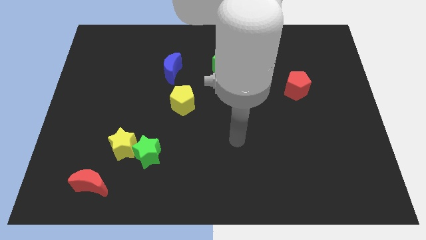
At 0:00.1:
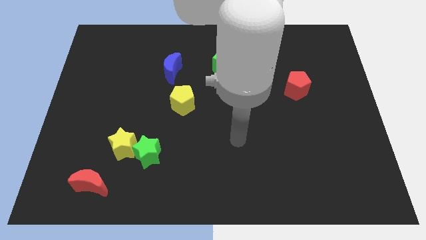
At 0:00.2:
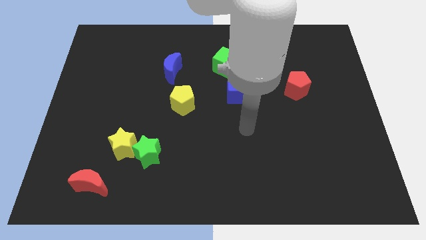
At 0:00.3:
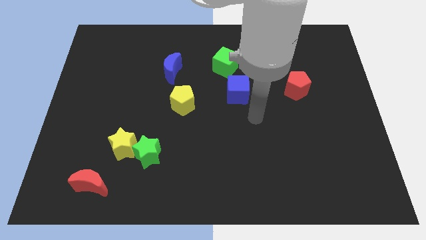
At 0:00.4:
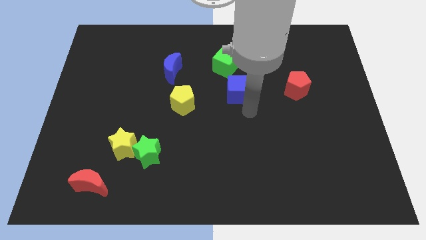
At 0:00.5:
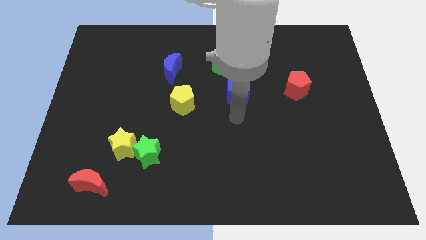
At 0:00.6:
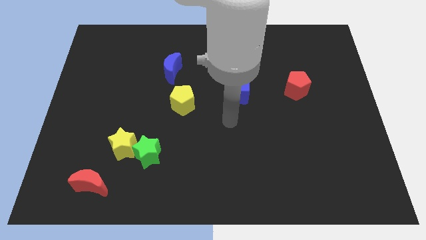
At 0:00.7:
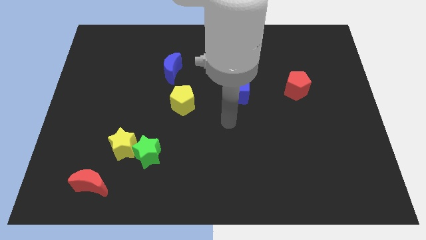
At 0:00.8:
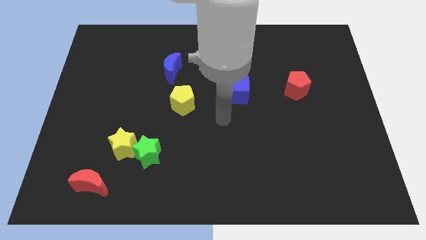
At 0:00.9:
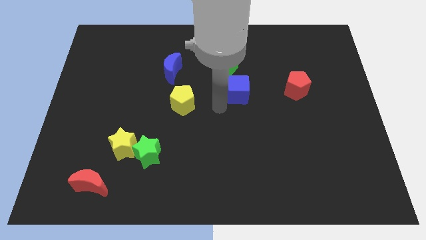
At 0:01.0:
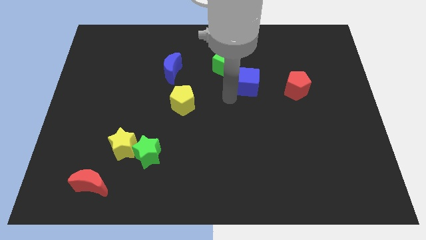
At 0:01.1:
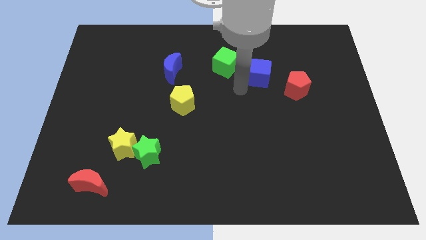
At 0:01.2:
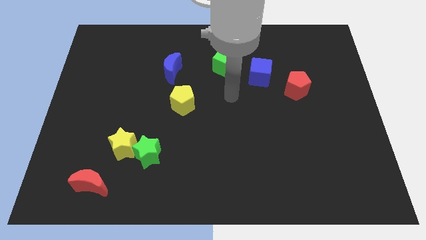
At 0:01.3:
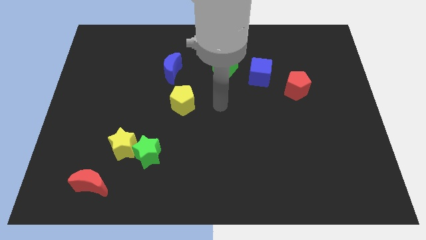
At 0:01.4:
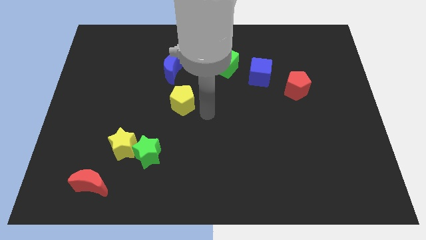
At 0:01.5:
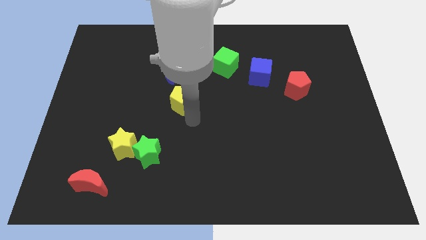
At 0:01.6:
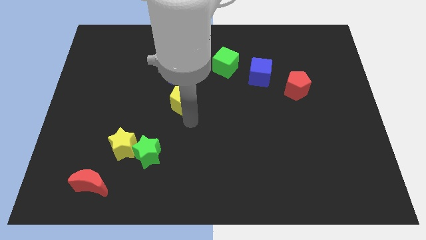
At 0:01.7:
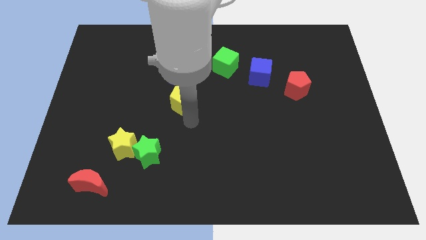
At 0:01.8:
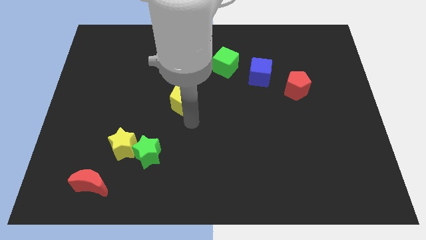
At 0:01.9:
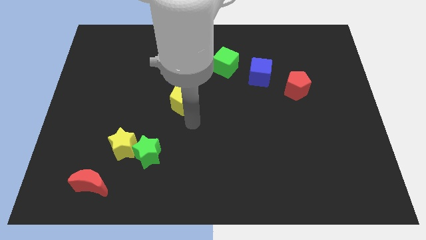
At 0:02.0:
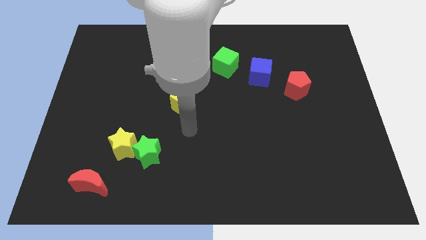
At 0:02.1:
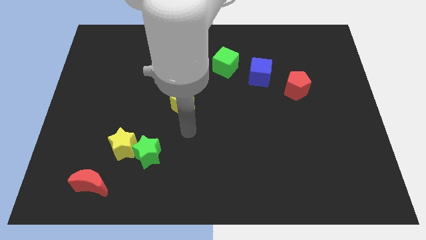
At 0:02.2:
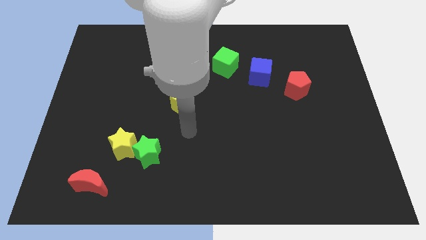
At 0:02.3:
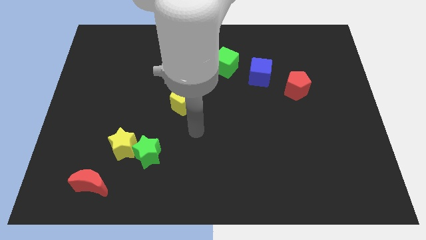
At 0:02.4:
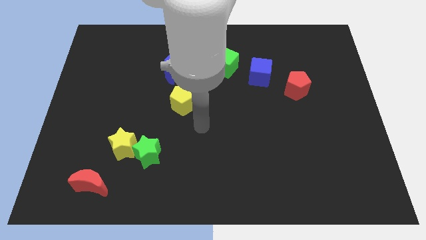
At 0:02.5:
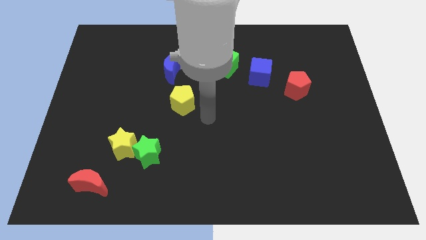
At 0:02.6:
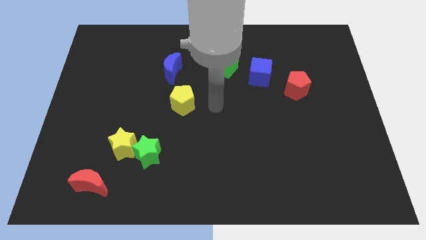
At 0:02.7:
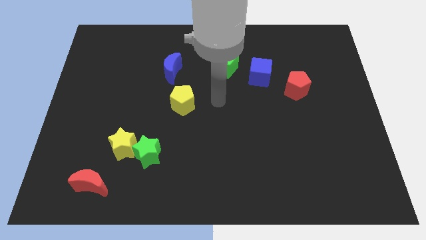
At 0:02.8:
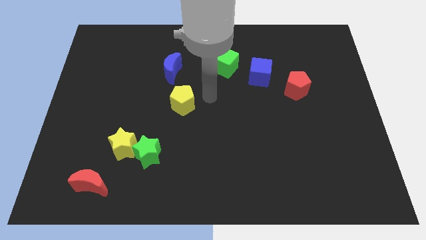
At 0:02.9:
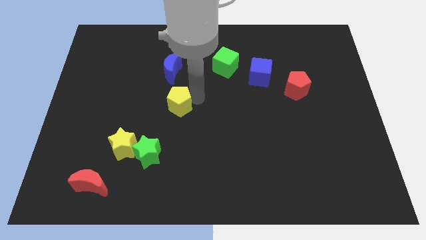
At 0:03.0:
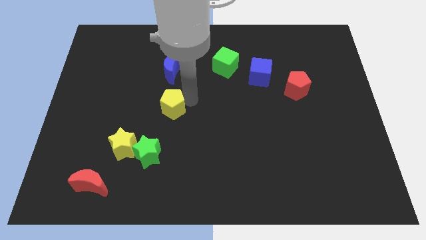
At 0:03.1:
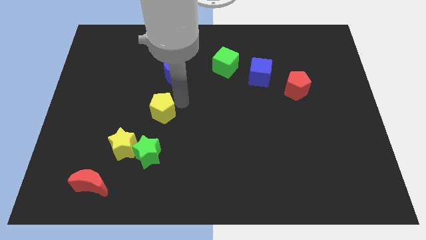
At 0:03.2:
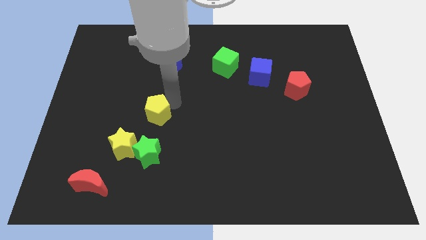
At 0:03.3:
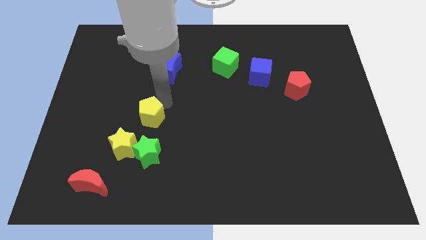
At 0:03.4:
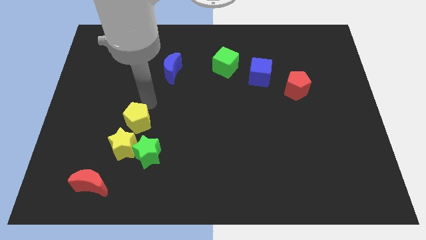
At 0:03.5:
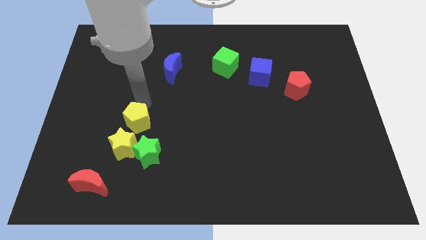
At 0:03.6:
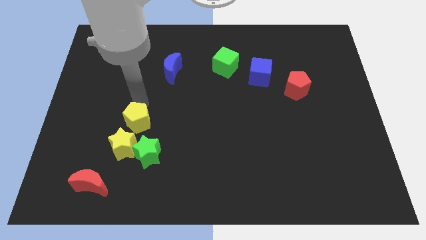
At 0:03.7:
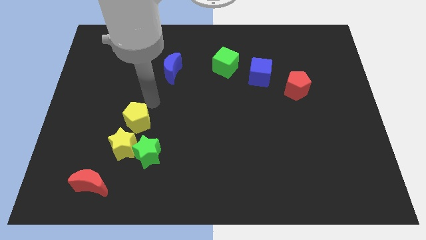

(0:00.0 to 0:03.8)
place the yellow pentagon close to the yellow star

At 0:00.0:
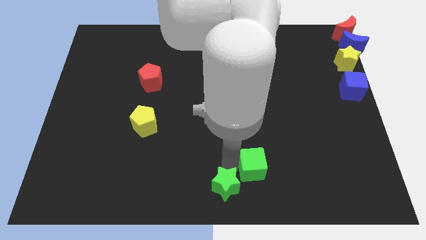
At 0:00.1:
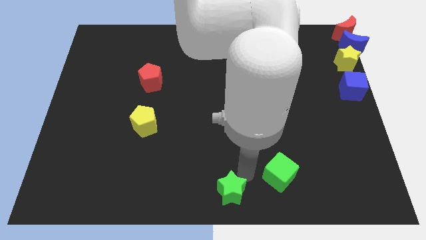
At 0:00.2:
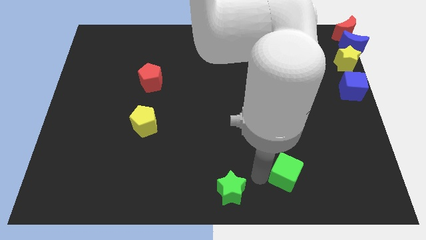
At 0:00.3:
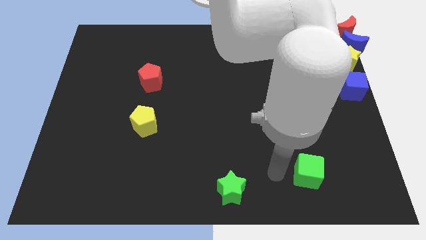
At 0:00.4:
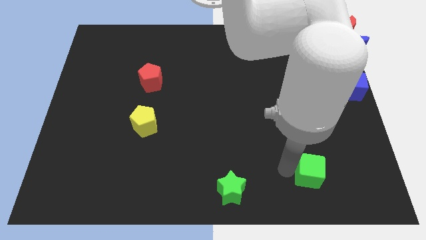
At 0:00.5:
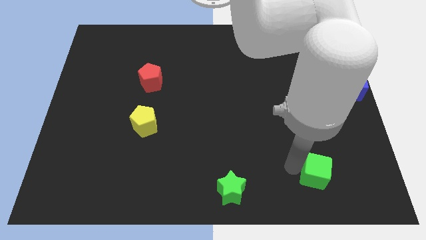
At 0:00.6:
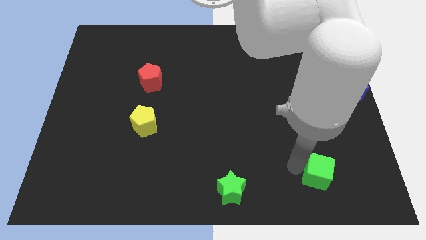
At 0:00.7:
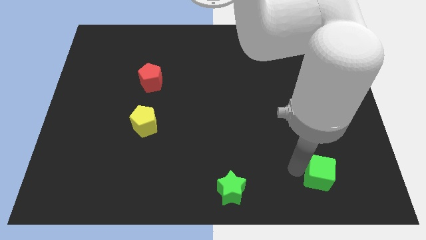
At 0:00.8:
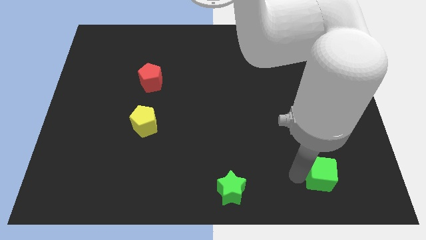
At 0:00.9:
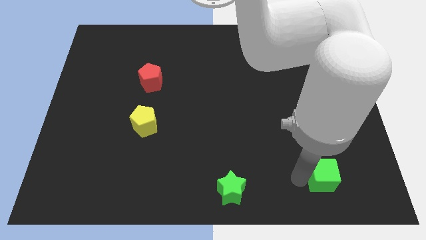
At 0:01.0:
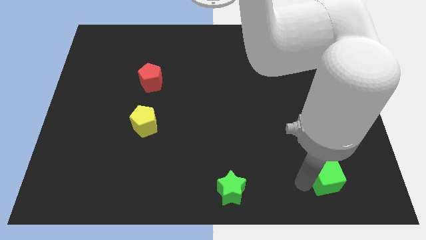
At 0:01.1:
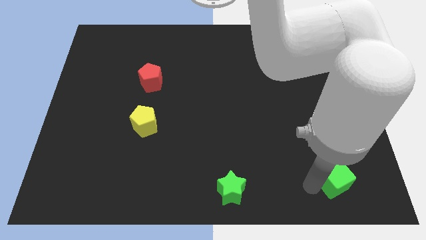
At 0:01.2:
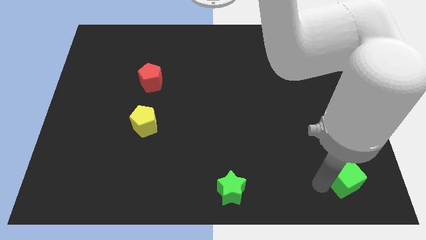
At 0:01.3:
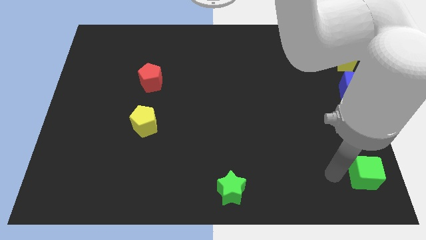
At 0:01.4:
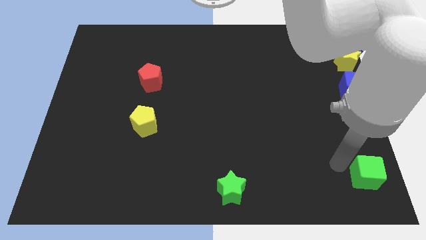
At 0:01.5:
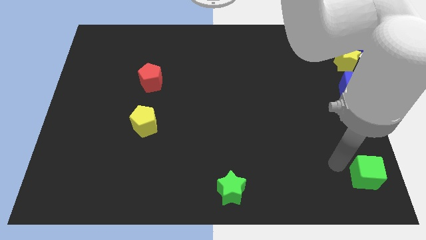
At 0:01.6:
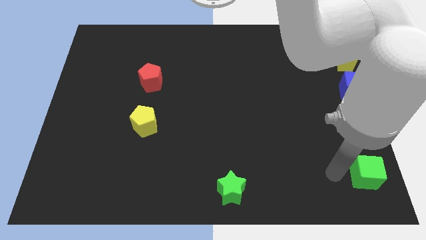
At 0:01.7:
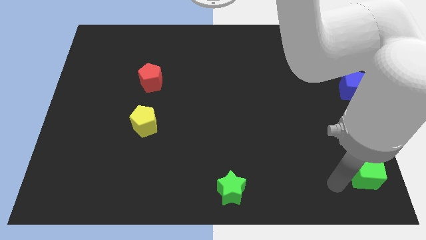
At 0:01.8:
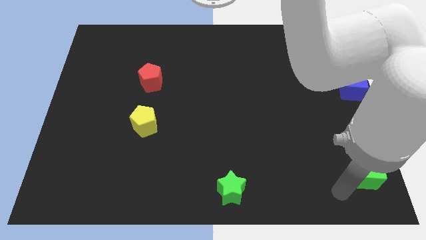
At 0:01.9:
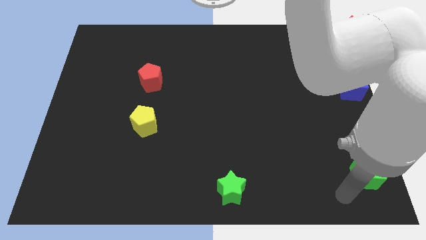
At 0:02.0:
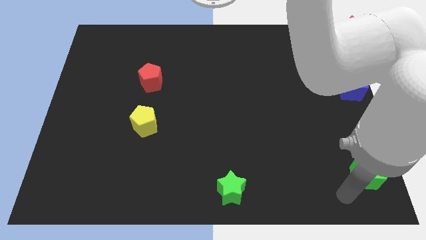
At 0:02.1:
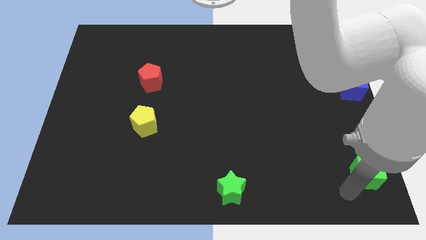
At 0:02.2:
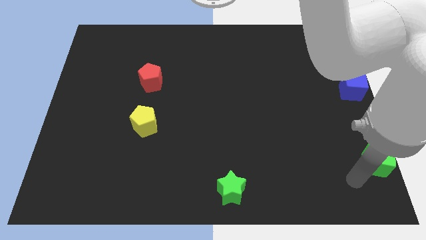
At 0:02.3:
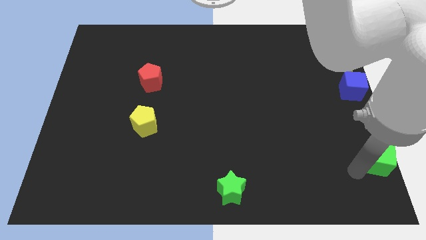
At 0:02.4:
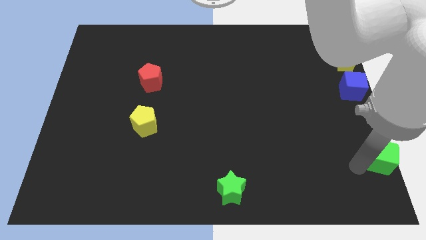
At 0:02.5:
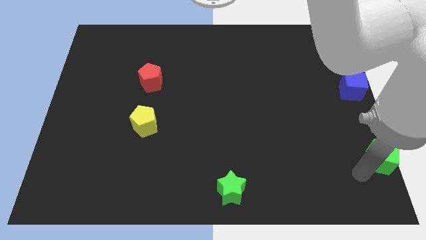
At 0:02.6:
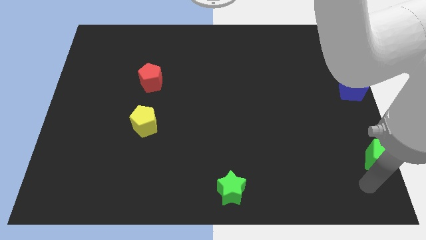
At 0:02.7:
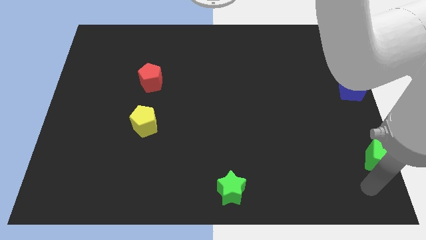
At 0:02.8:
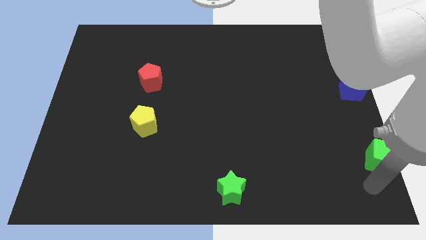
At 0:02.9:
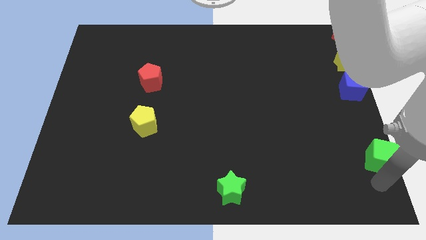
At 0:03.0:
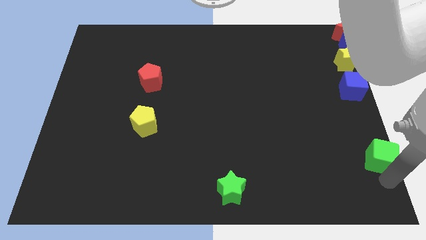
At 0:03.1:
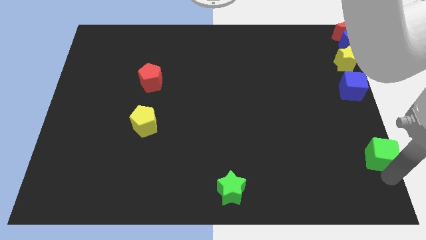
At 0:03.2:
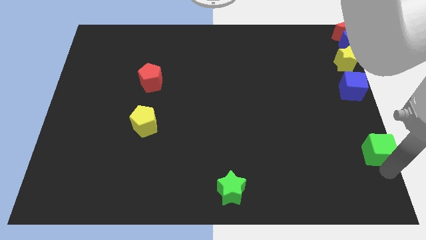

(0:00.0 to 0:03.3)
drag green cube towards bottom right of the board

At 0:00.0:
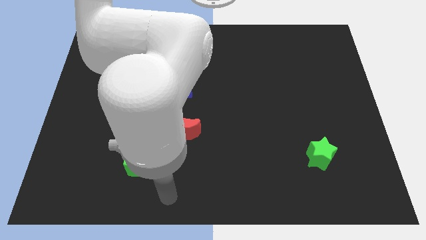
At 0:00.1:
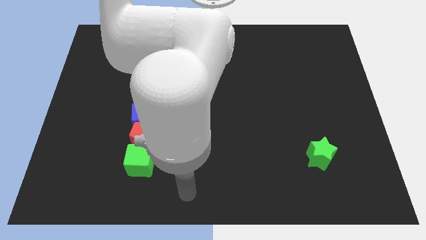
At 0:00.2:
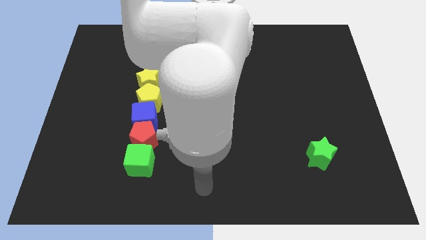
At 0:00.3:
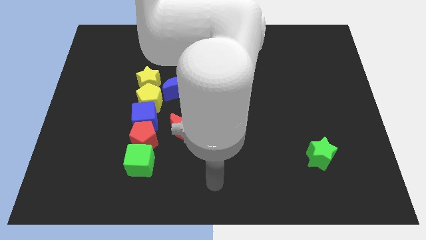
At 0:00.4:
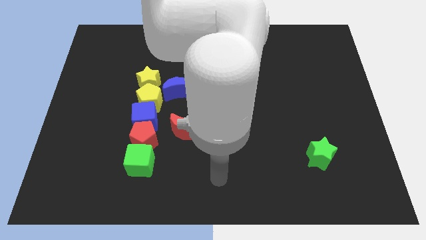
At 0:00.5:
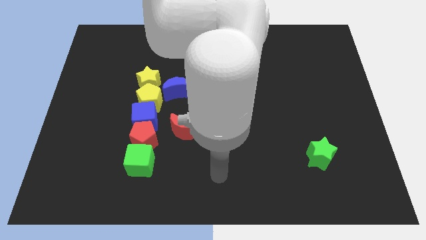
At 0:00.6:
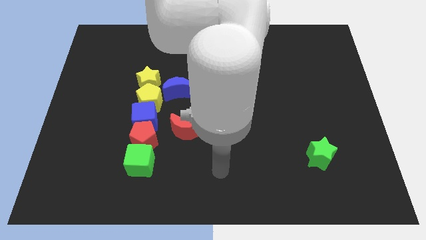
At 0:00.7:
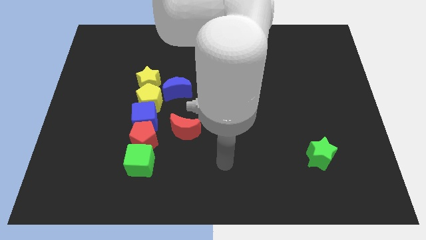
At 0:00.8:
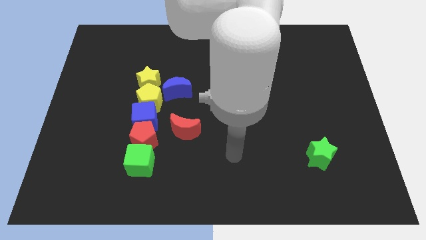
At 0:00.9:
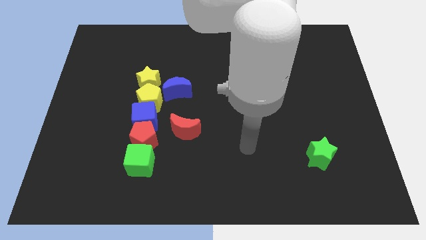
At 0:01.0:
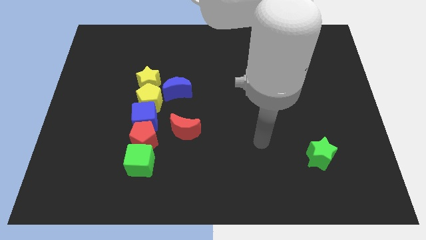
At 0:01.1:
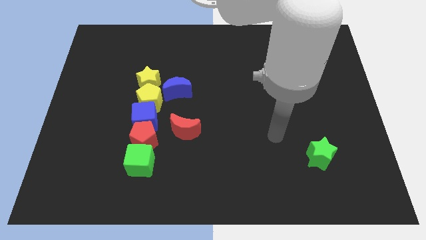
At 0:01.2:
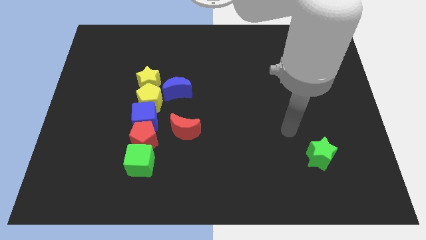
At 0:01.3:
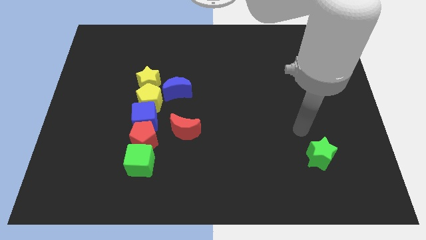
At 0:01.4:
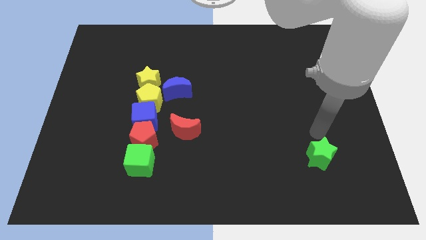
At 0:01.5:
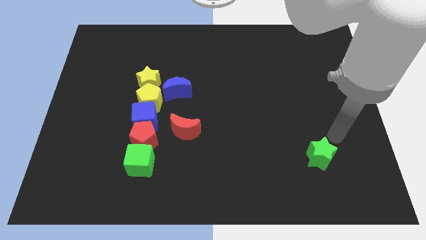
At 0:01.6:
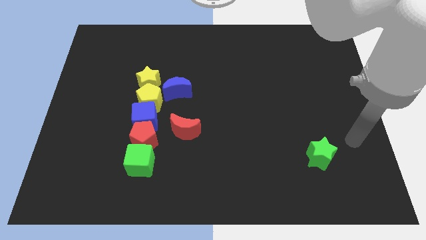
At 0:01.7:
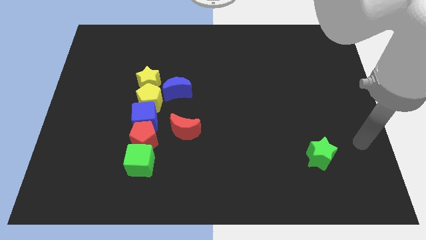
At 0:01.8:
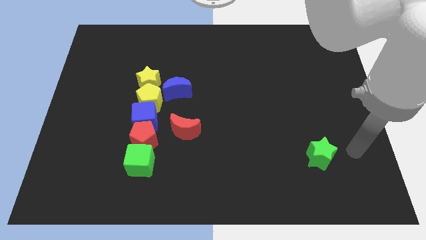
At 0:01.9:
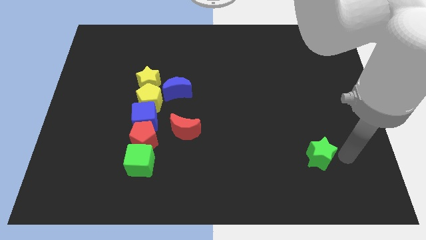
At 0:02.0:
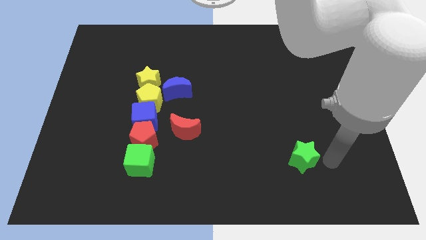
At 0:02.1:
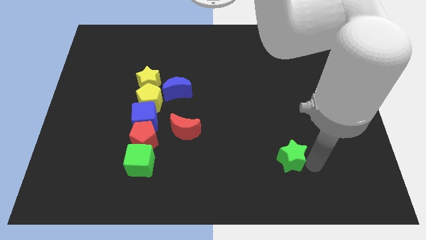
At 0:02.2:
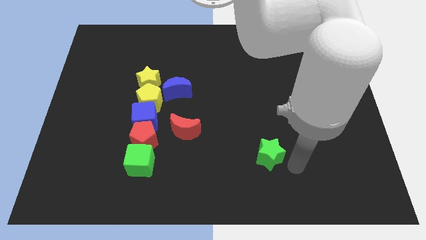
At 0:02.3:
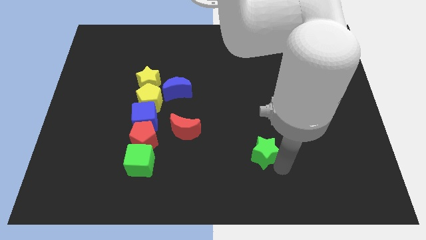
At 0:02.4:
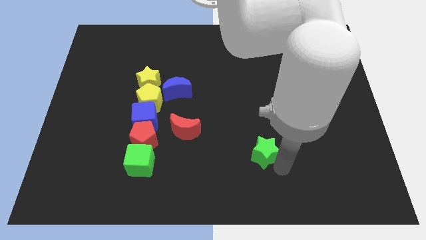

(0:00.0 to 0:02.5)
move the green star diagonally to the red moon
